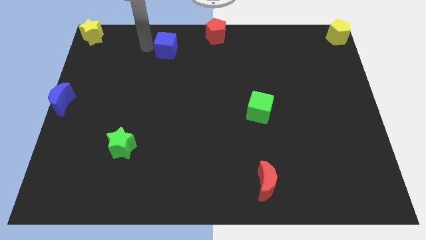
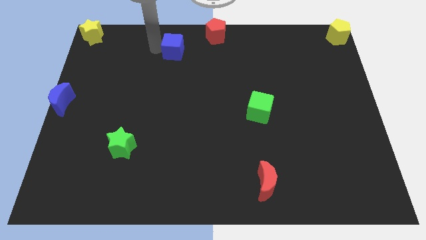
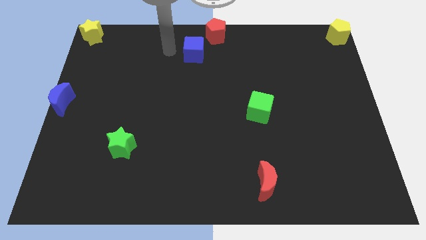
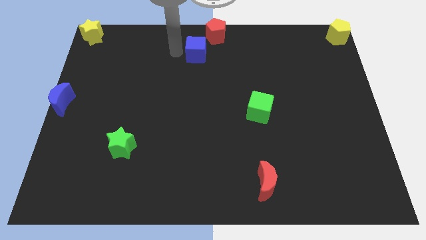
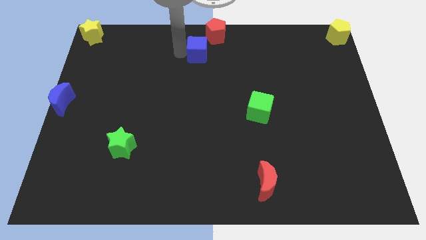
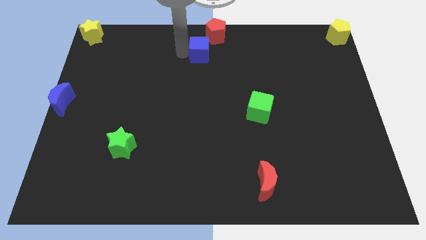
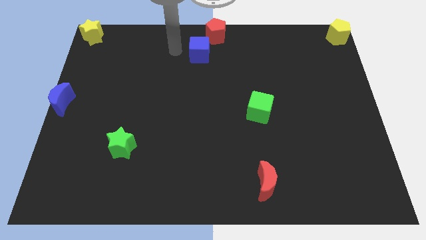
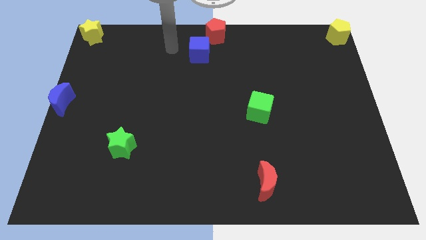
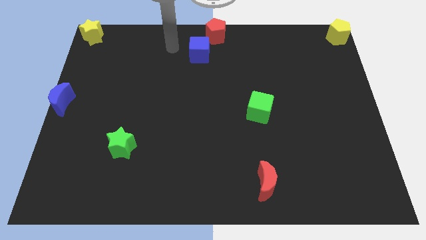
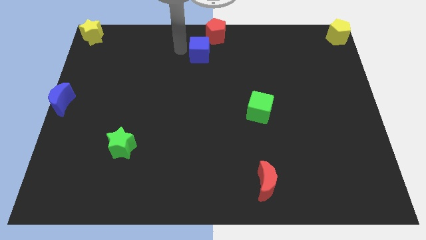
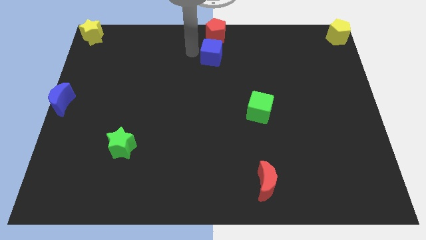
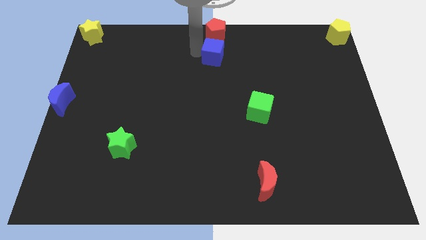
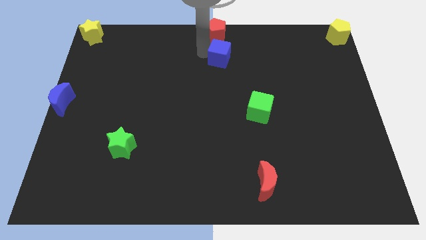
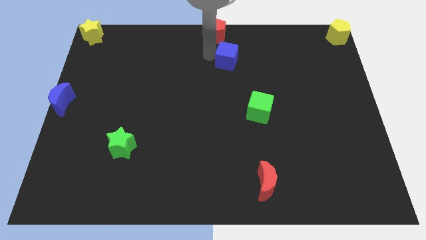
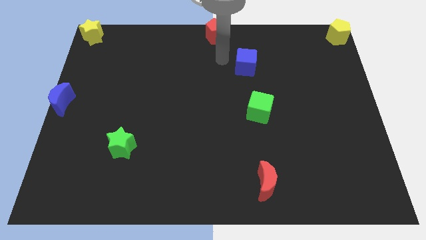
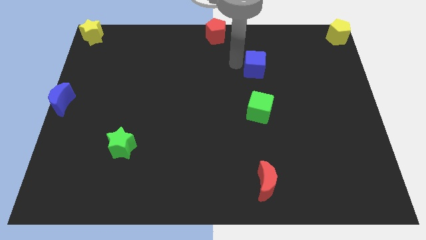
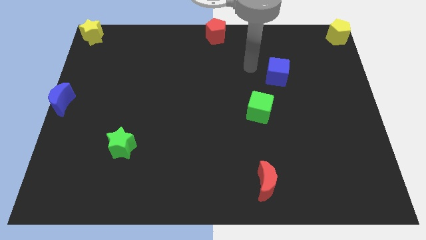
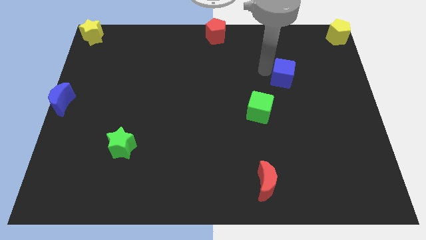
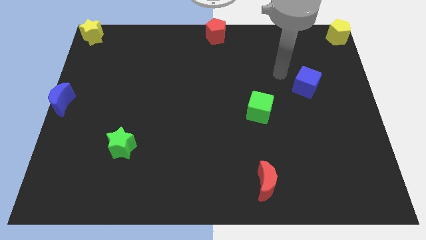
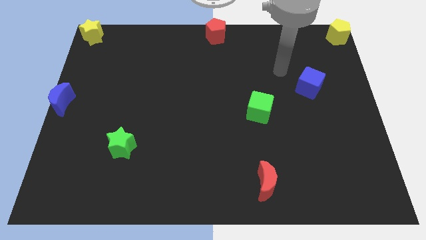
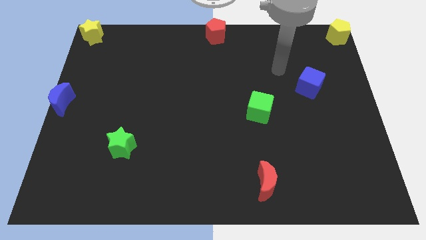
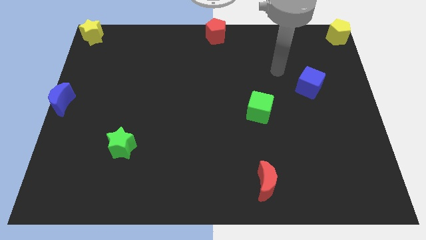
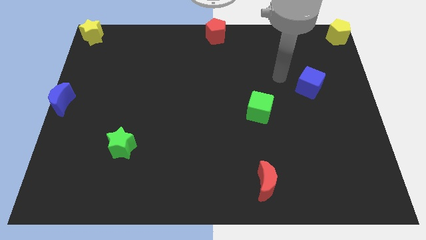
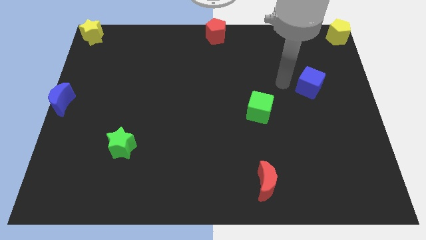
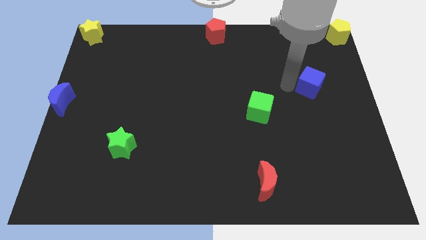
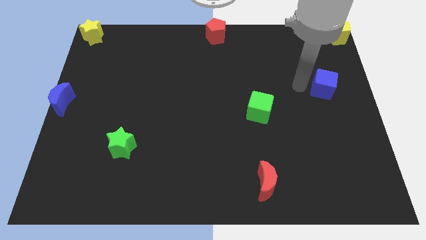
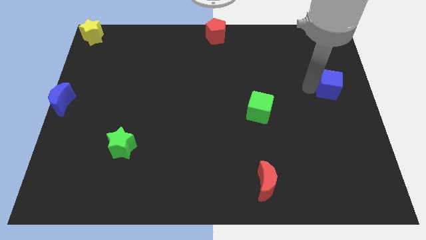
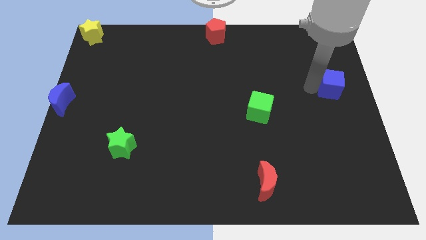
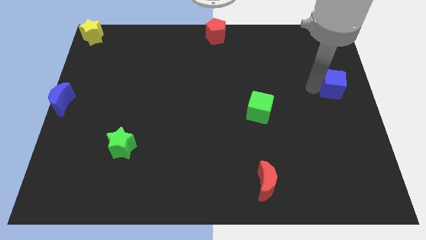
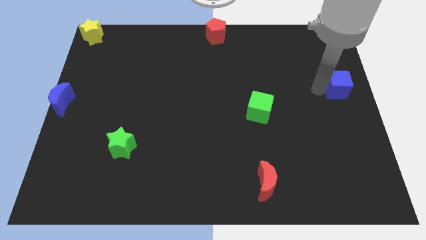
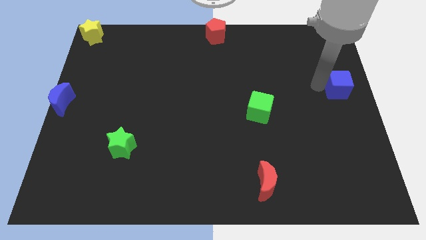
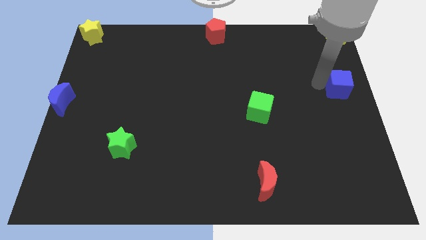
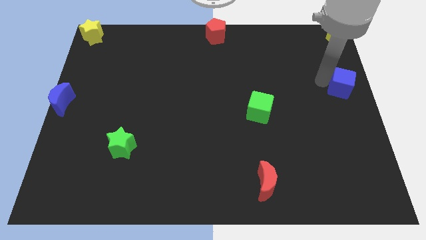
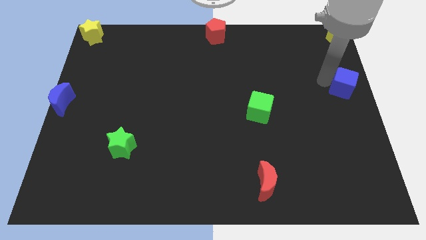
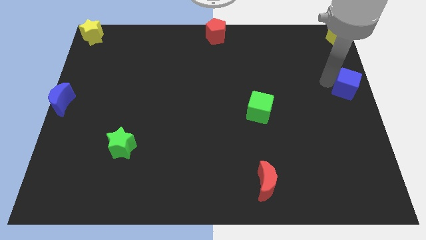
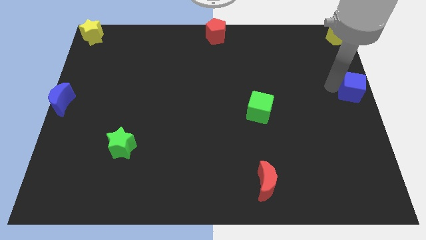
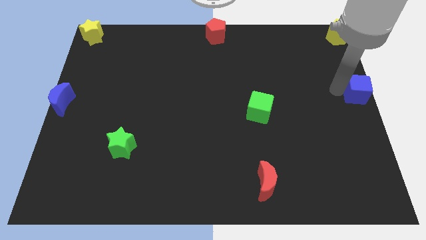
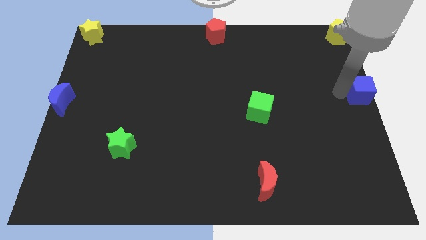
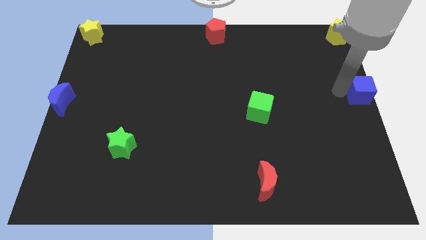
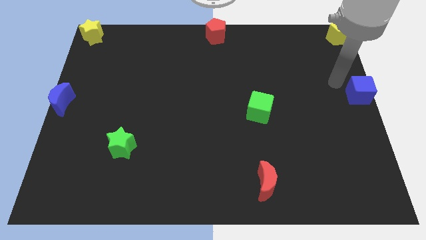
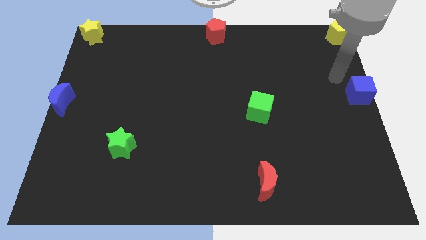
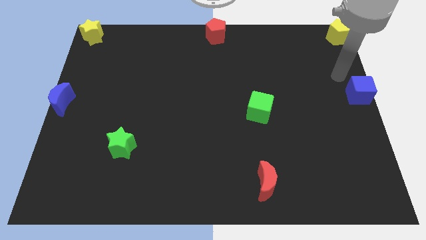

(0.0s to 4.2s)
move the blue cube to the center right

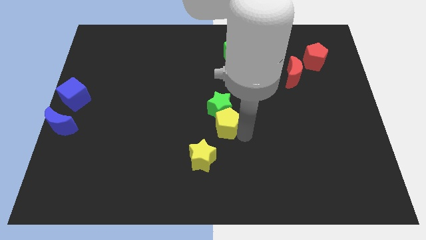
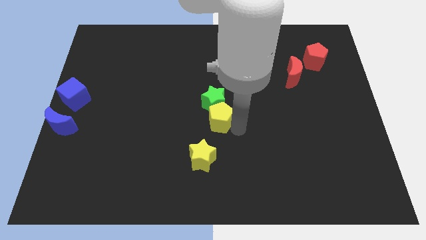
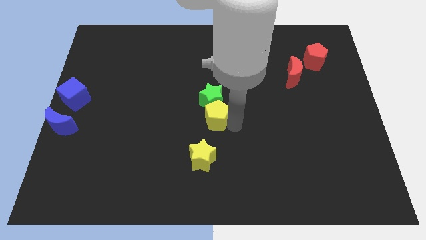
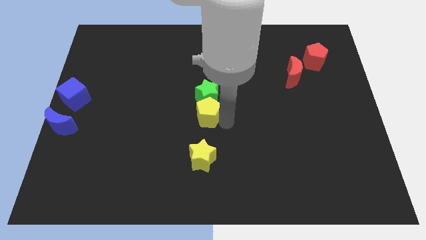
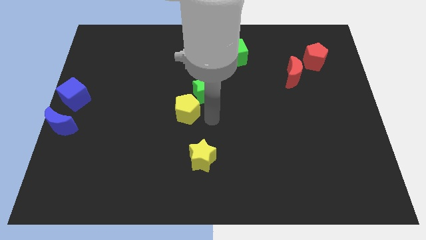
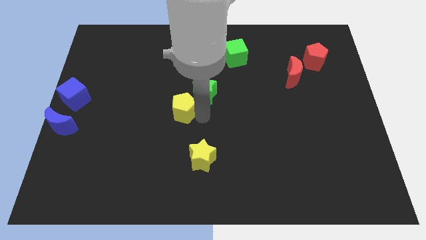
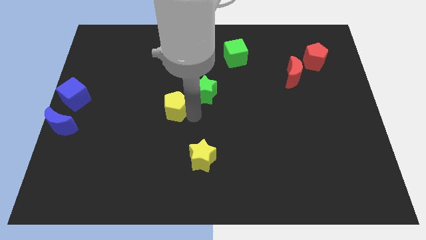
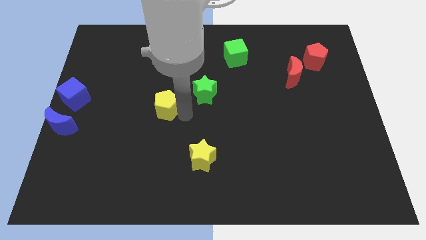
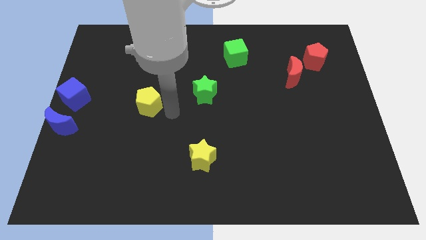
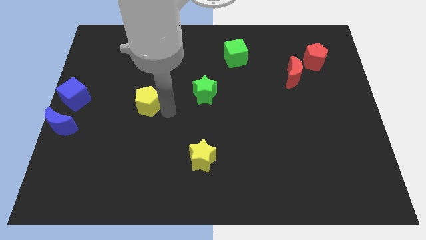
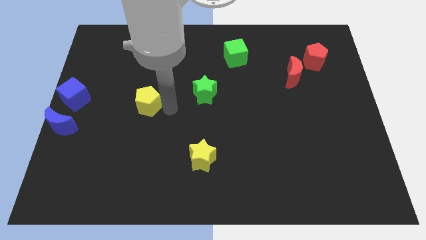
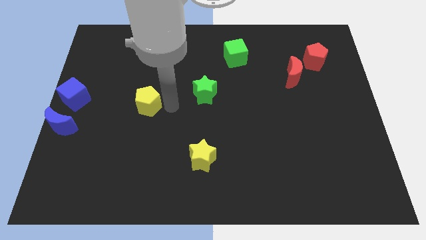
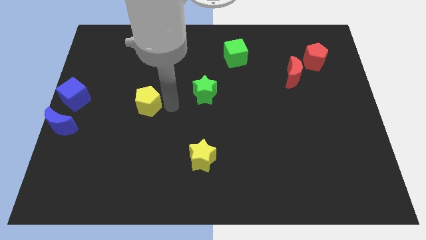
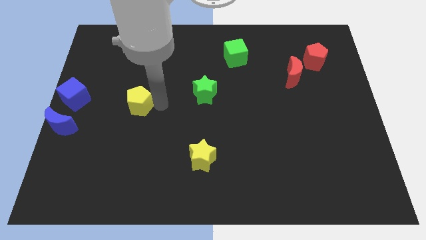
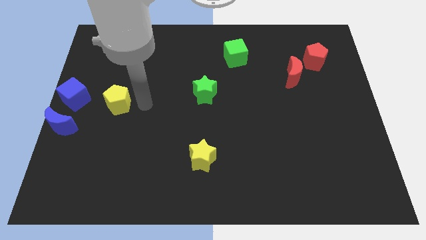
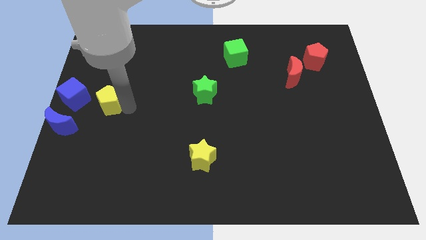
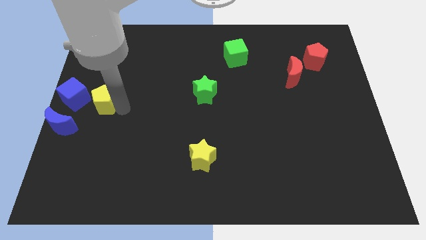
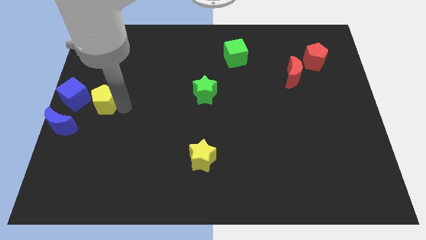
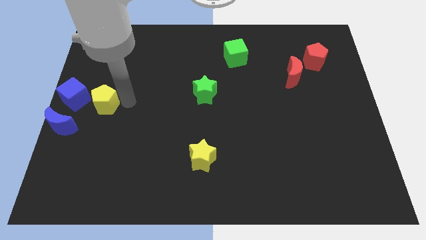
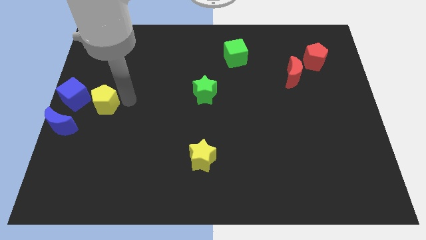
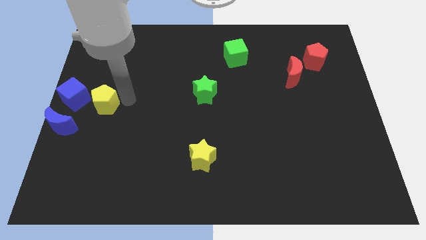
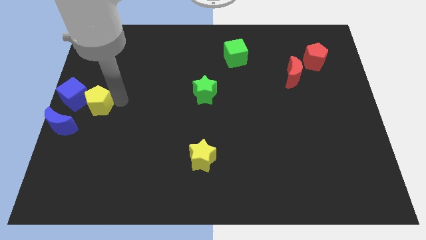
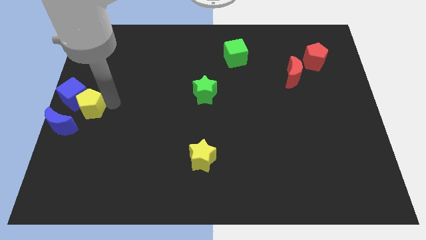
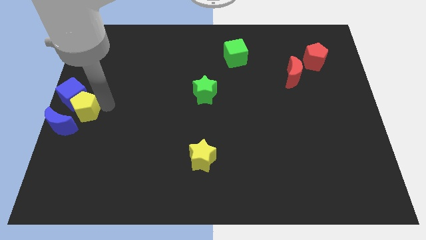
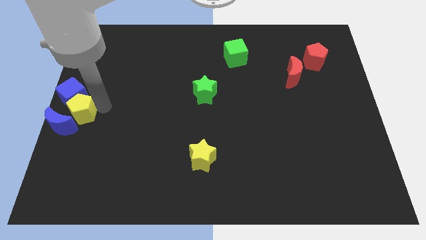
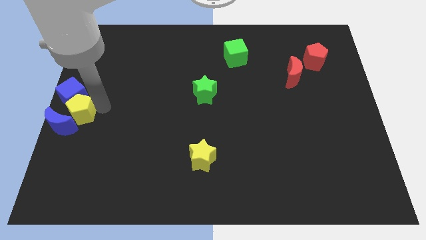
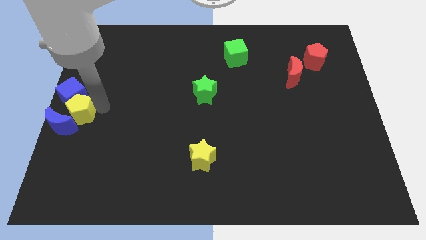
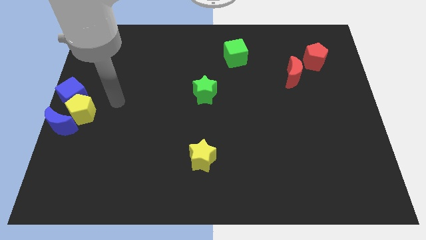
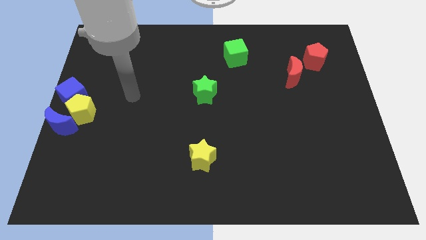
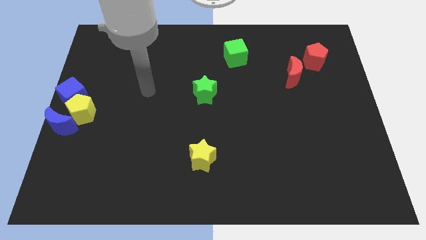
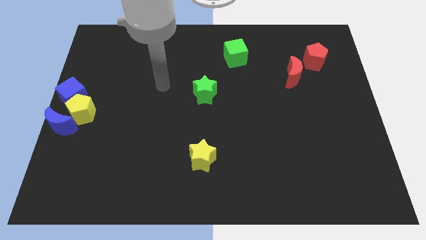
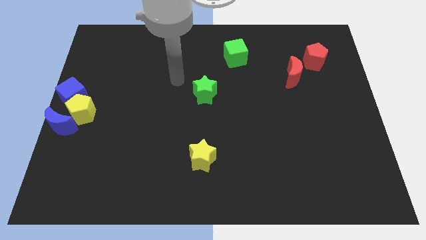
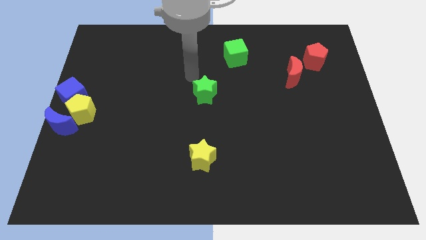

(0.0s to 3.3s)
move the yellow pentagon between blue blocks

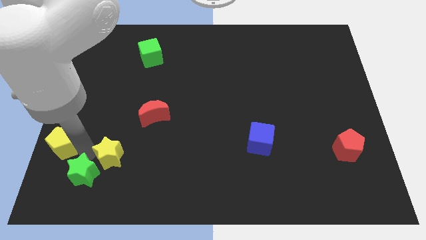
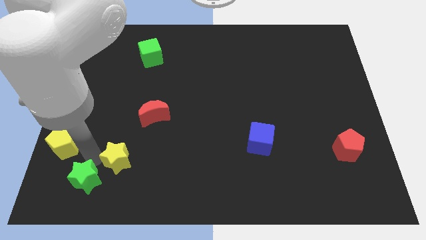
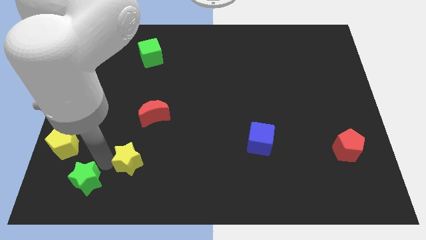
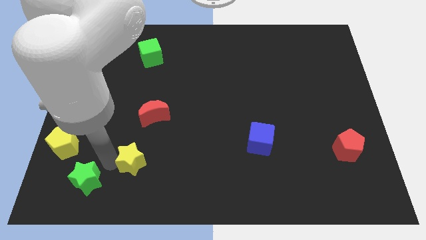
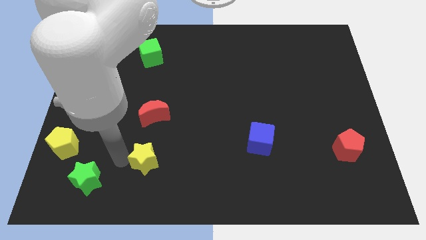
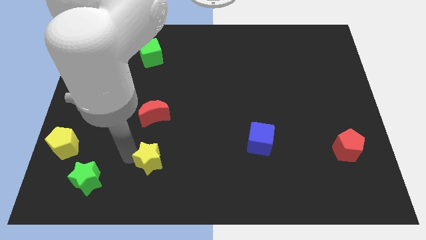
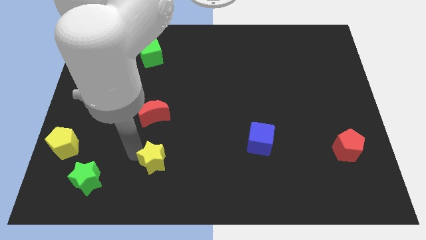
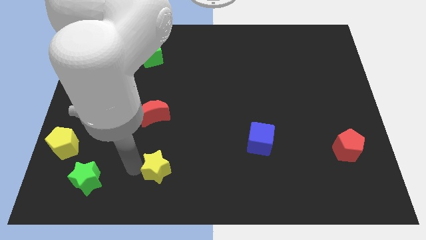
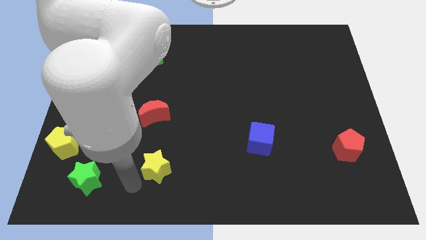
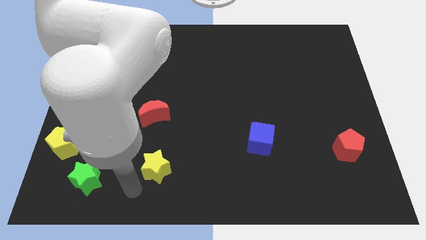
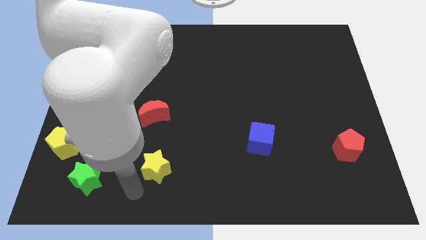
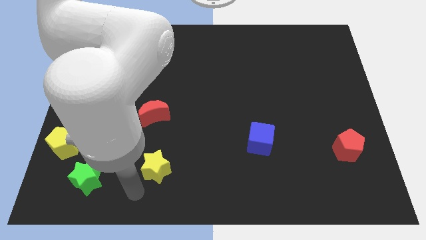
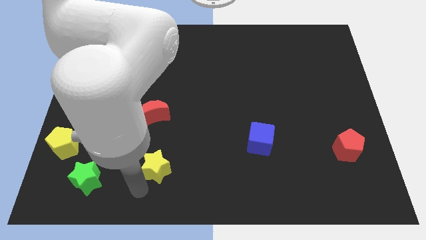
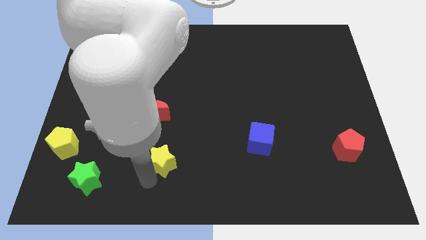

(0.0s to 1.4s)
move the yellow star to the bottom of the red crescent
